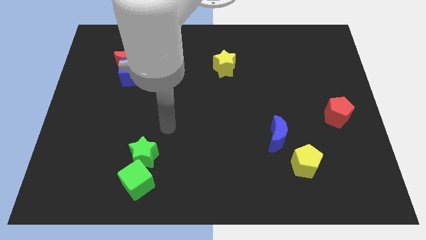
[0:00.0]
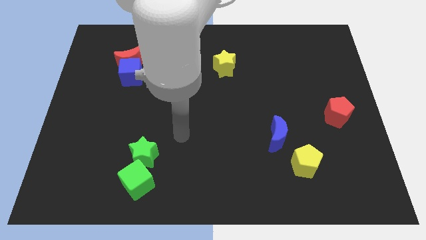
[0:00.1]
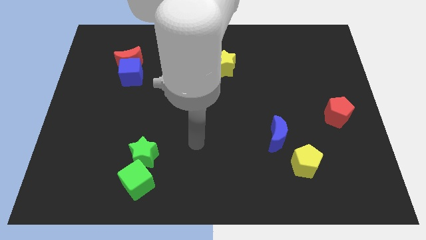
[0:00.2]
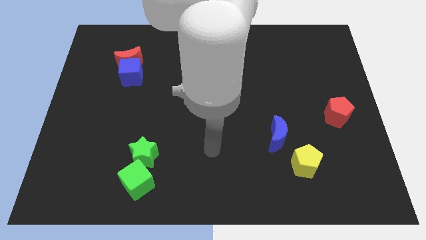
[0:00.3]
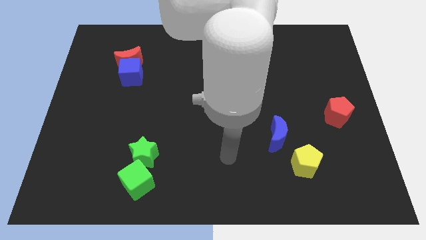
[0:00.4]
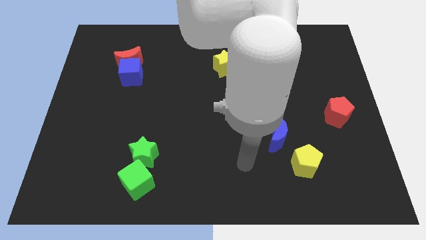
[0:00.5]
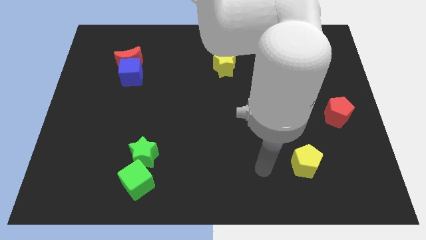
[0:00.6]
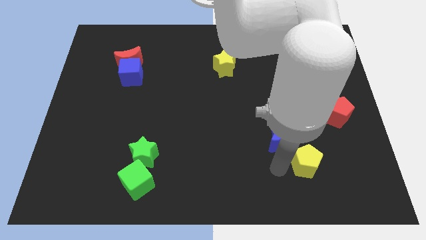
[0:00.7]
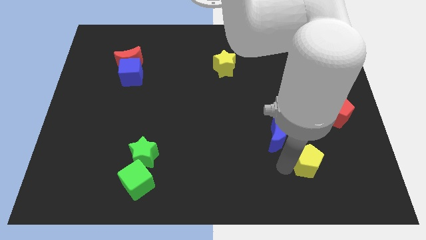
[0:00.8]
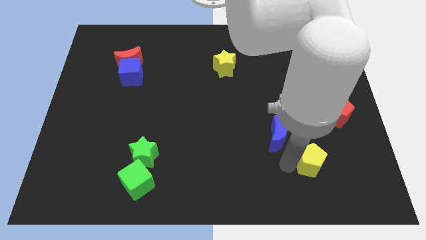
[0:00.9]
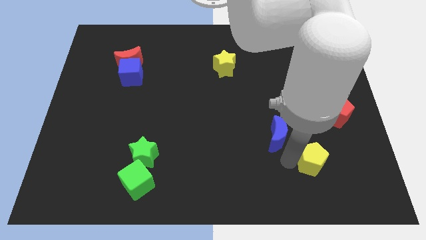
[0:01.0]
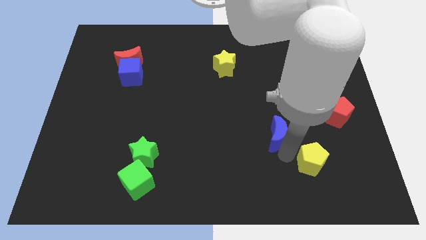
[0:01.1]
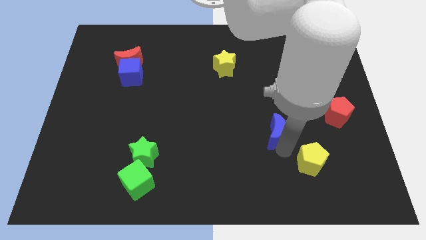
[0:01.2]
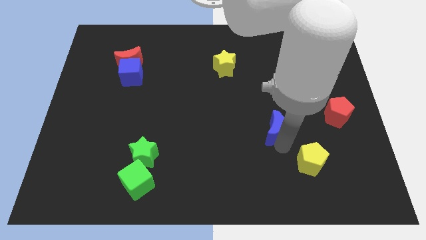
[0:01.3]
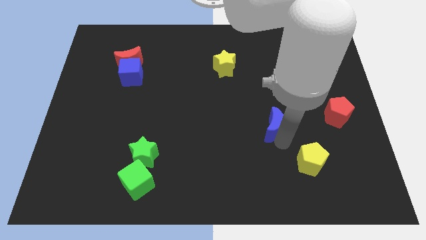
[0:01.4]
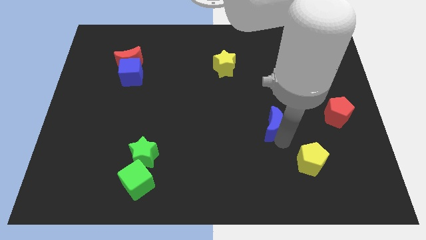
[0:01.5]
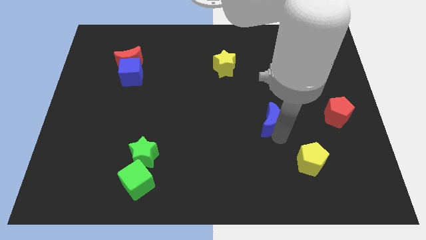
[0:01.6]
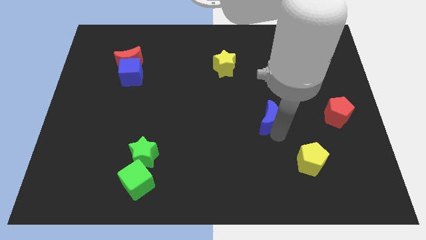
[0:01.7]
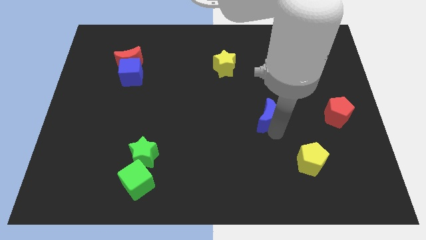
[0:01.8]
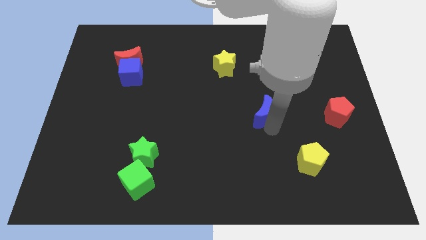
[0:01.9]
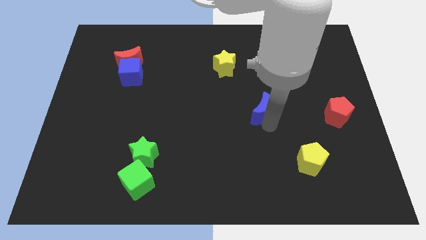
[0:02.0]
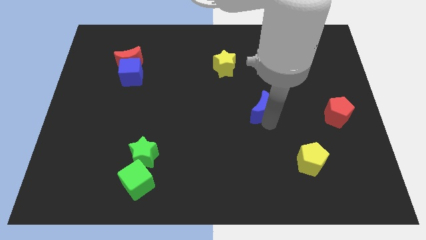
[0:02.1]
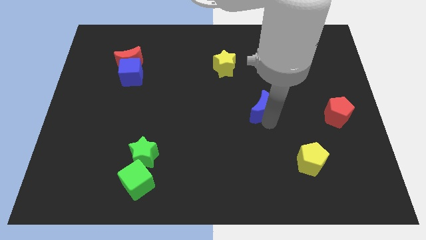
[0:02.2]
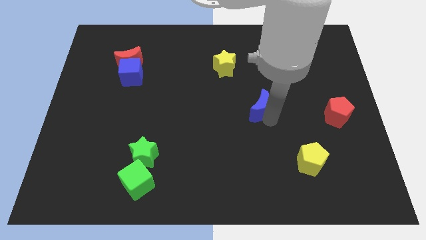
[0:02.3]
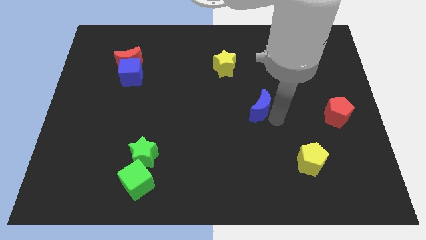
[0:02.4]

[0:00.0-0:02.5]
push the blue moon closer to the yellow star

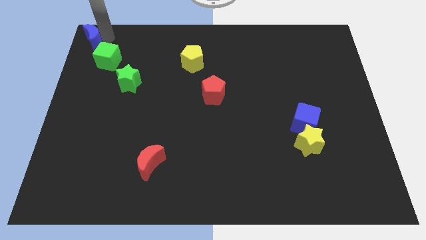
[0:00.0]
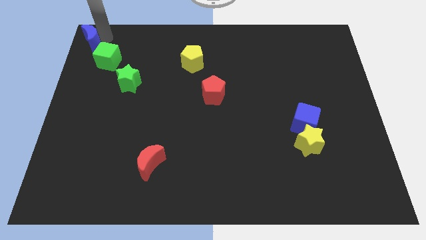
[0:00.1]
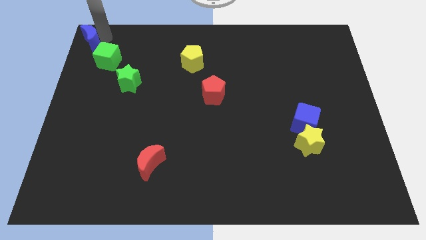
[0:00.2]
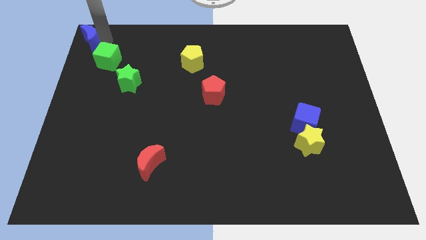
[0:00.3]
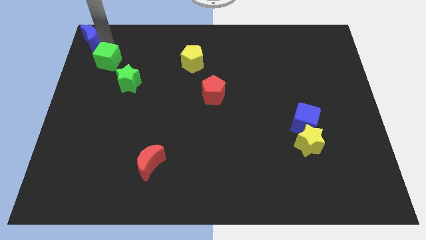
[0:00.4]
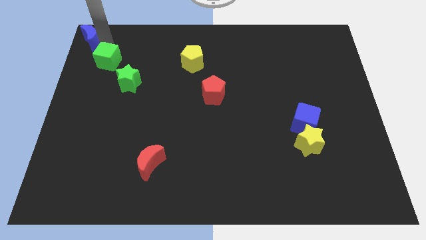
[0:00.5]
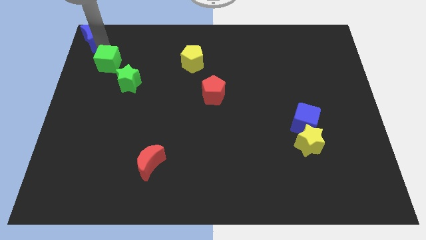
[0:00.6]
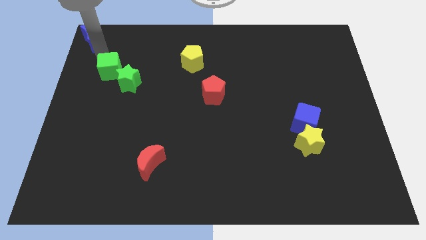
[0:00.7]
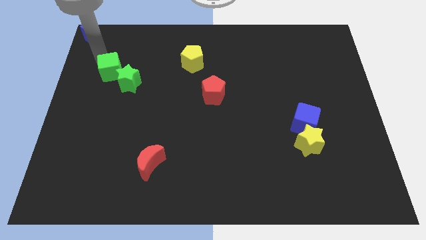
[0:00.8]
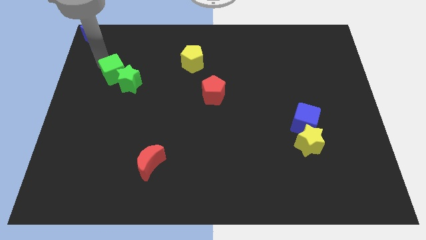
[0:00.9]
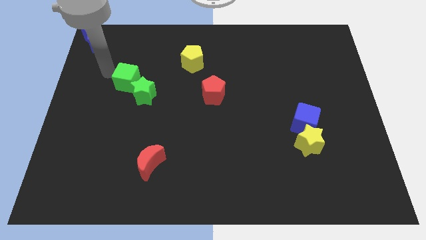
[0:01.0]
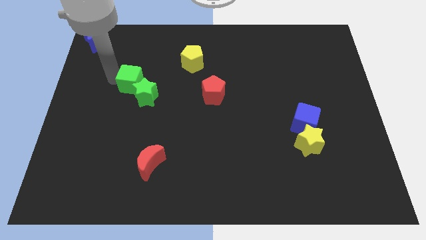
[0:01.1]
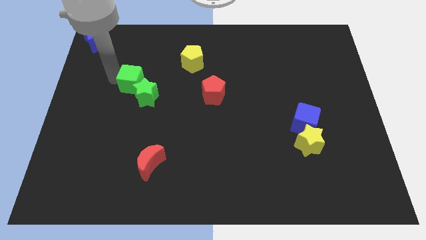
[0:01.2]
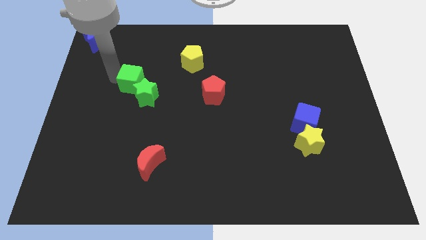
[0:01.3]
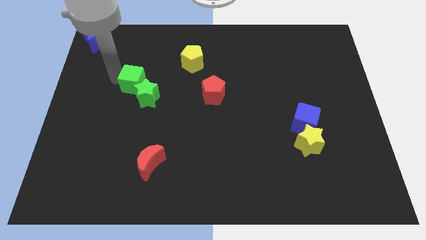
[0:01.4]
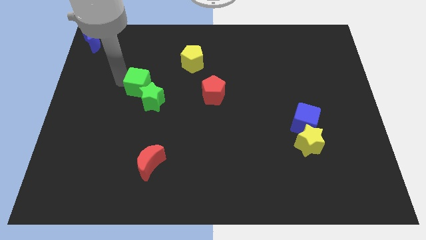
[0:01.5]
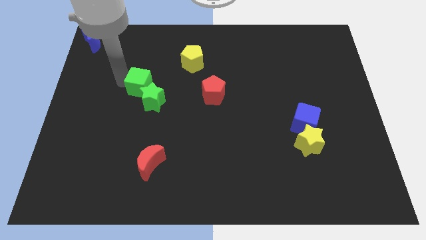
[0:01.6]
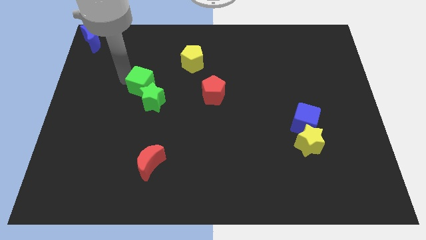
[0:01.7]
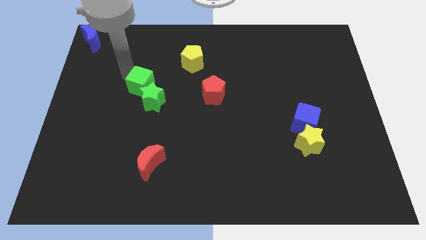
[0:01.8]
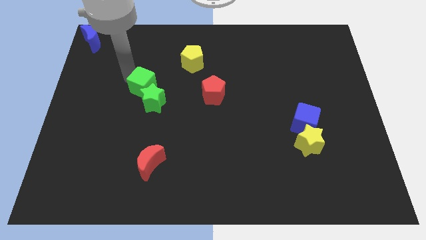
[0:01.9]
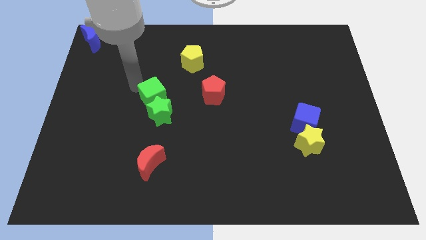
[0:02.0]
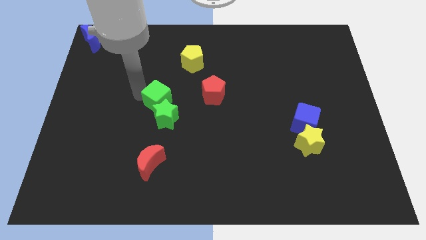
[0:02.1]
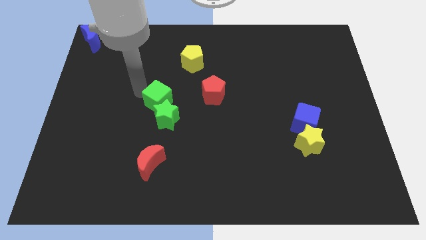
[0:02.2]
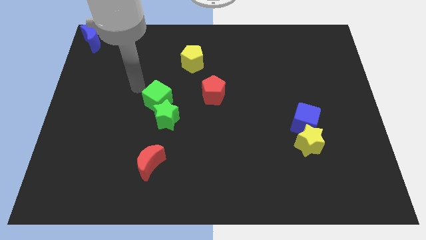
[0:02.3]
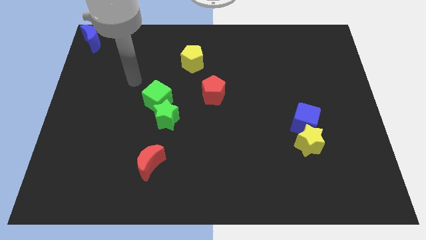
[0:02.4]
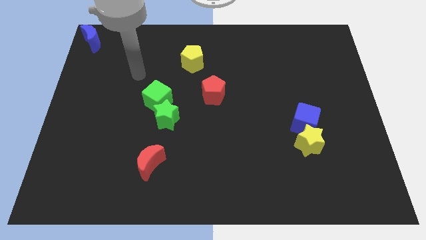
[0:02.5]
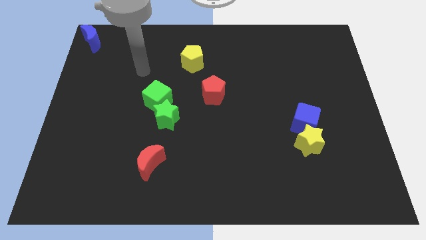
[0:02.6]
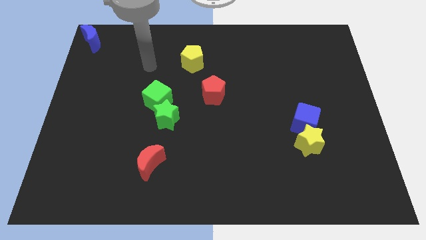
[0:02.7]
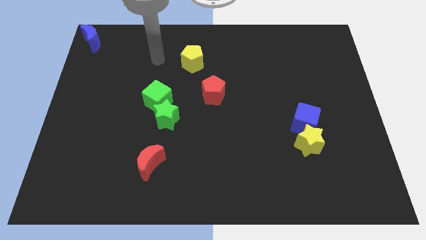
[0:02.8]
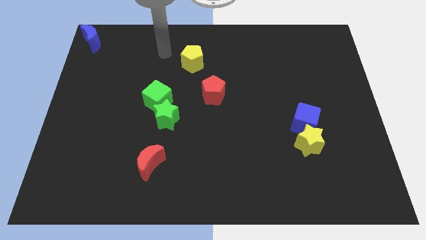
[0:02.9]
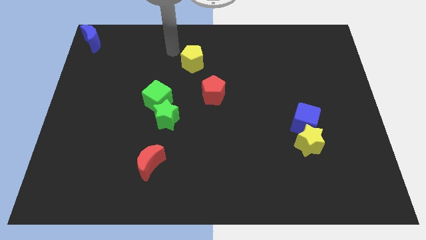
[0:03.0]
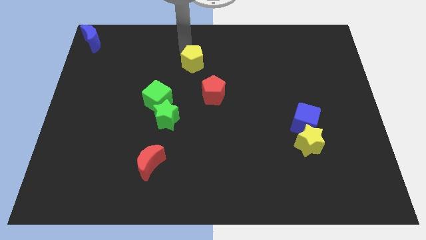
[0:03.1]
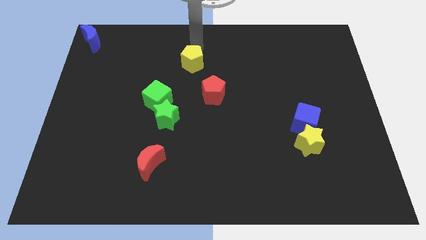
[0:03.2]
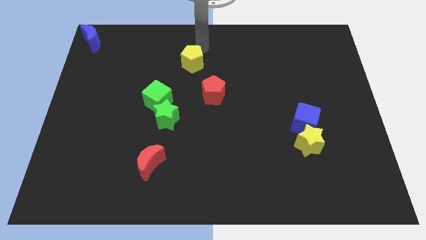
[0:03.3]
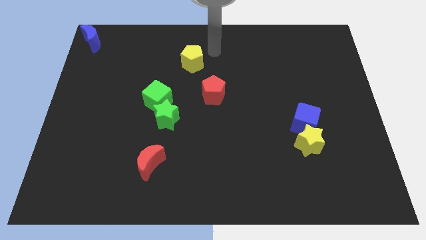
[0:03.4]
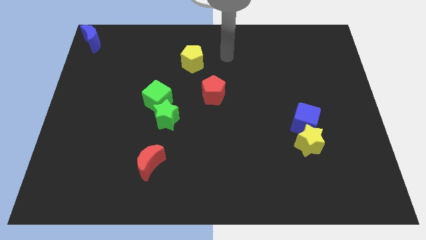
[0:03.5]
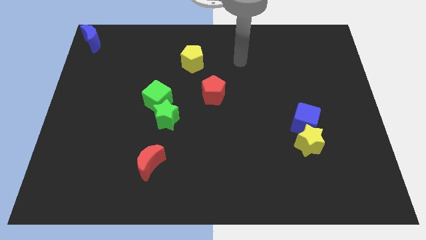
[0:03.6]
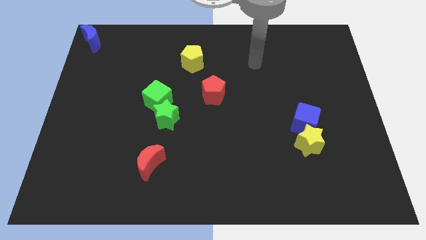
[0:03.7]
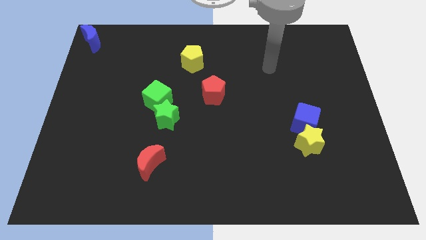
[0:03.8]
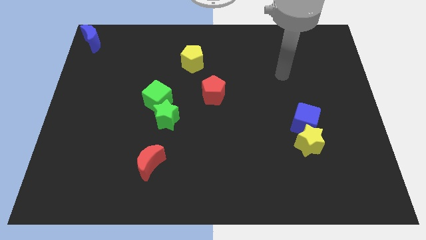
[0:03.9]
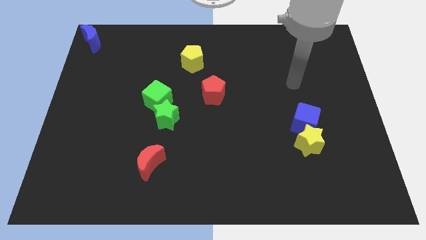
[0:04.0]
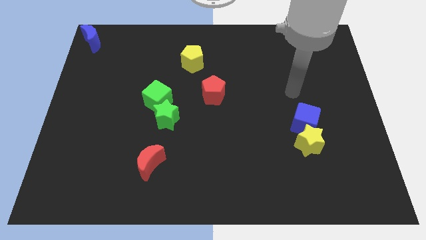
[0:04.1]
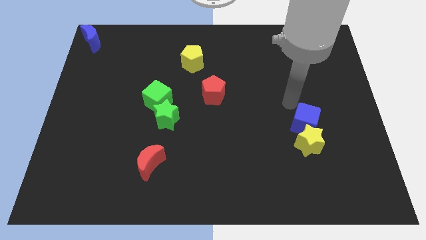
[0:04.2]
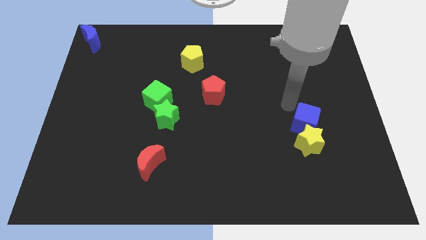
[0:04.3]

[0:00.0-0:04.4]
push the green cube into the green star

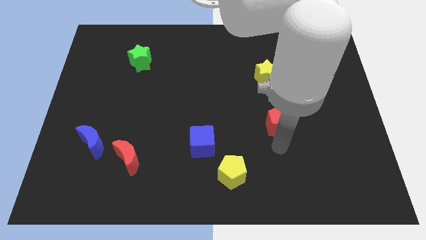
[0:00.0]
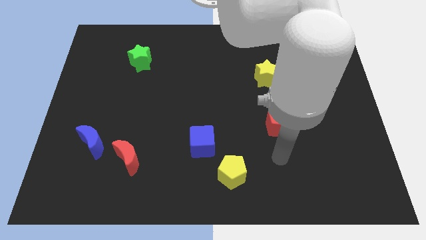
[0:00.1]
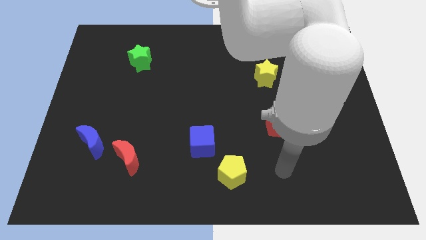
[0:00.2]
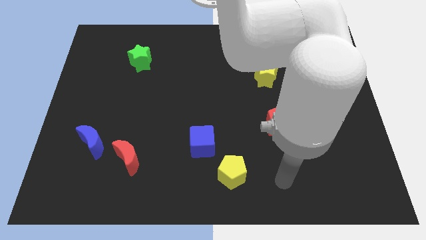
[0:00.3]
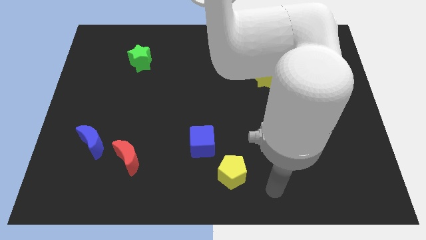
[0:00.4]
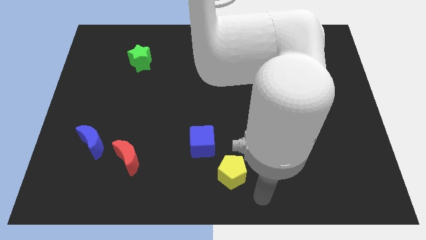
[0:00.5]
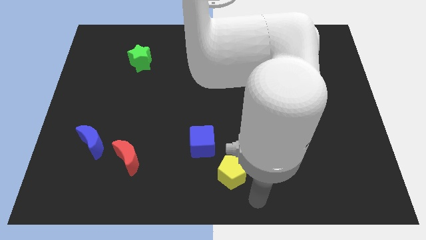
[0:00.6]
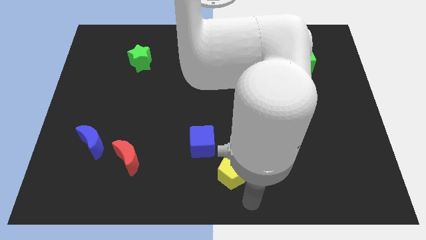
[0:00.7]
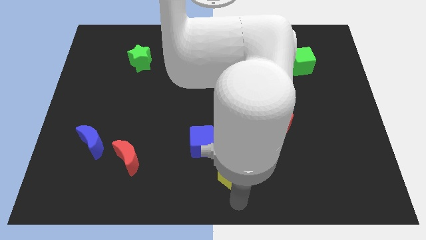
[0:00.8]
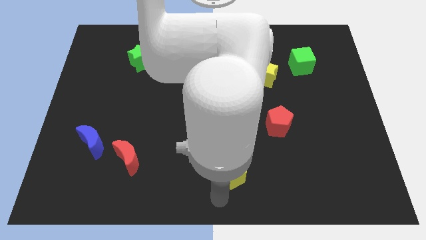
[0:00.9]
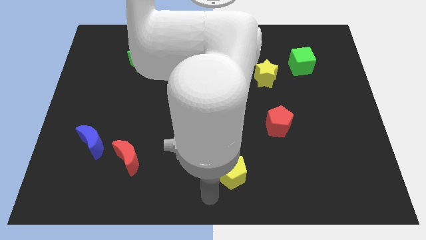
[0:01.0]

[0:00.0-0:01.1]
place your arm below the yellow pentagon

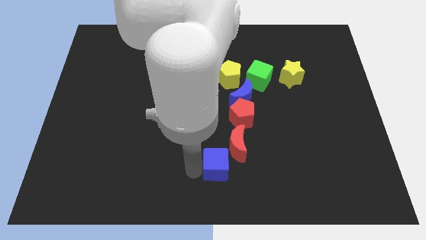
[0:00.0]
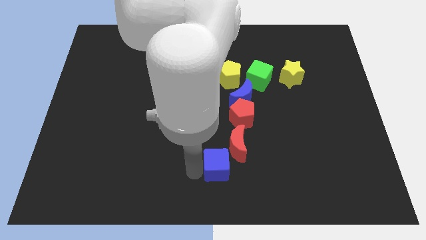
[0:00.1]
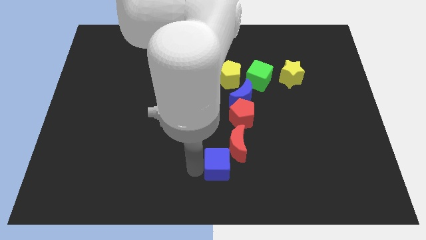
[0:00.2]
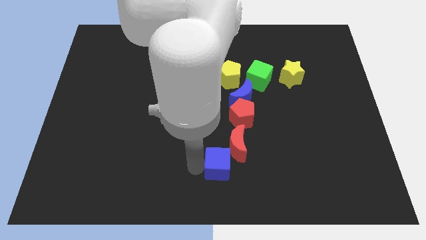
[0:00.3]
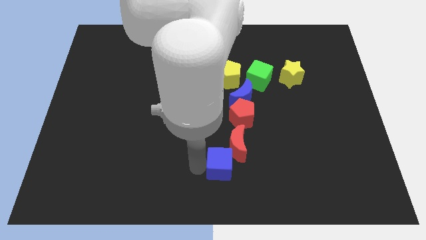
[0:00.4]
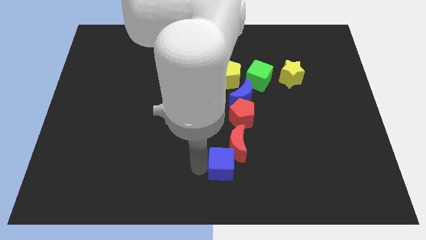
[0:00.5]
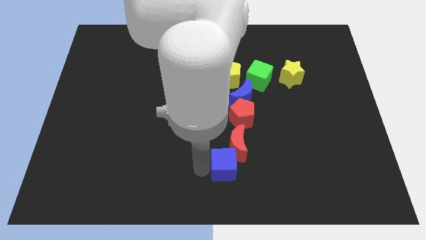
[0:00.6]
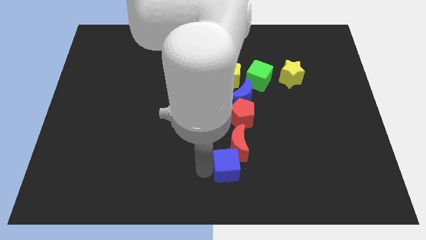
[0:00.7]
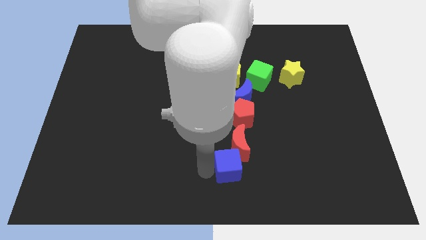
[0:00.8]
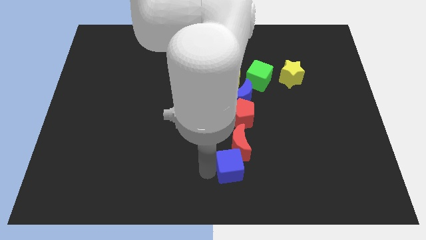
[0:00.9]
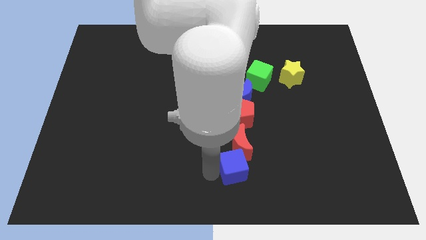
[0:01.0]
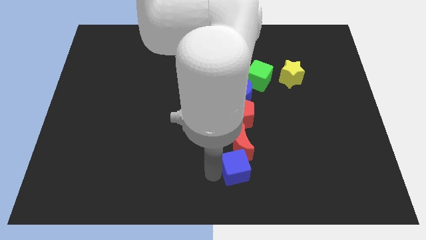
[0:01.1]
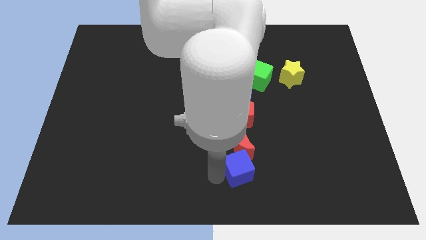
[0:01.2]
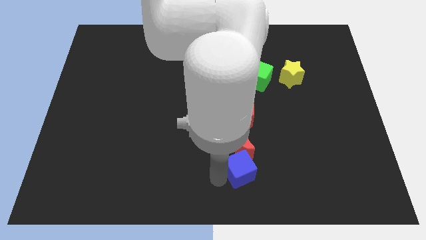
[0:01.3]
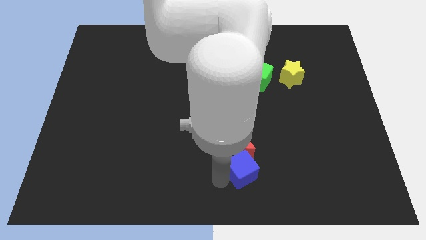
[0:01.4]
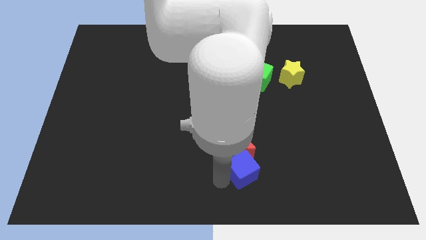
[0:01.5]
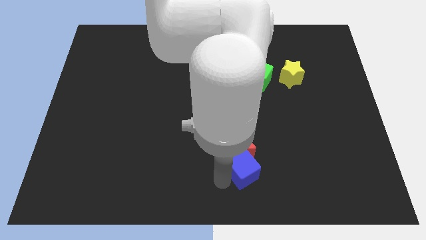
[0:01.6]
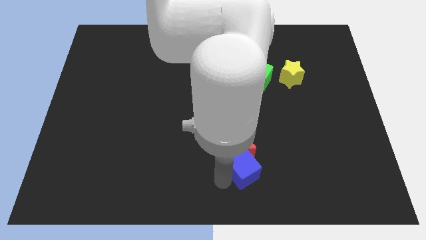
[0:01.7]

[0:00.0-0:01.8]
push blue cube into red half moon
